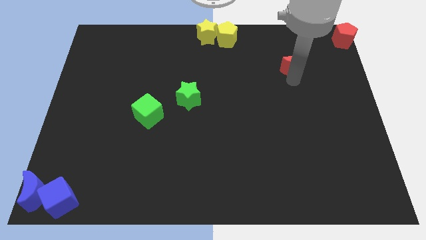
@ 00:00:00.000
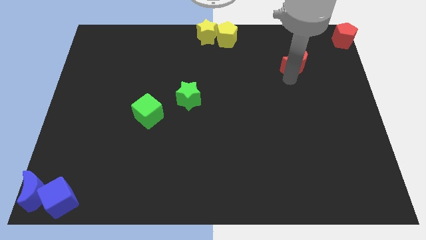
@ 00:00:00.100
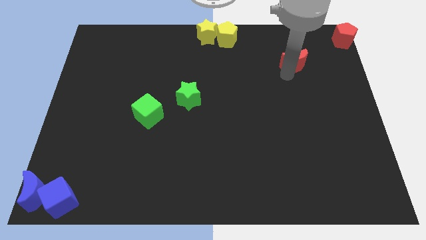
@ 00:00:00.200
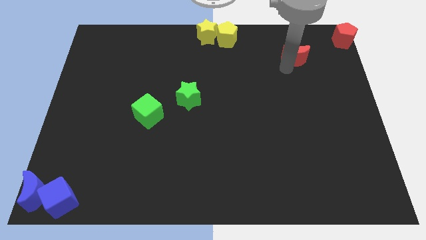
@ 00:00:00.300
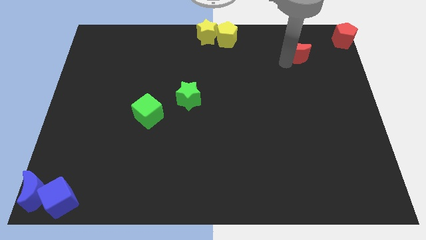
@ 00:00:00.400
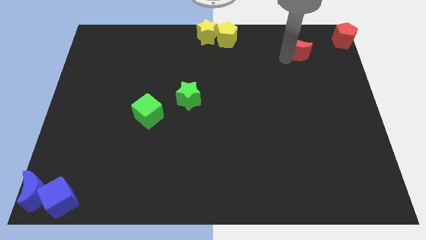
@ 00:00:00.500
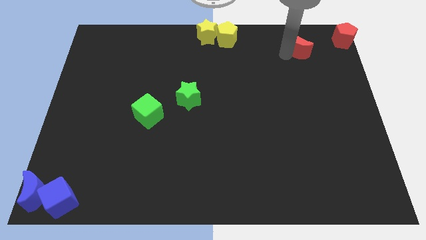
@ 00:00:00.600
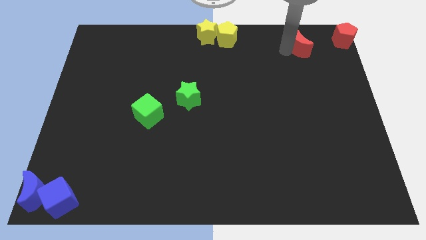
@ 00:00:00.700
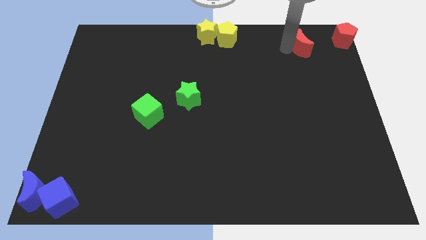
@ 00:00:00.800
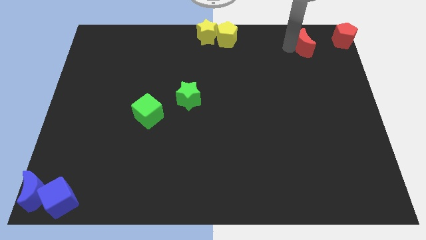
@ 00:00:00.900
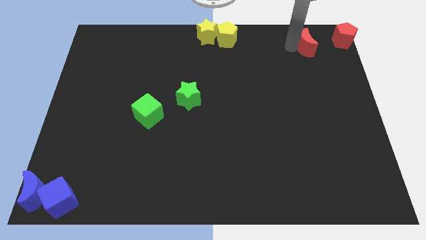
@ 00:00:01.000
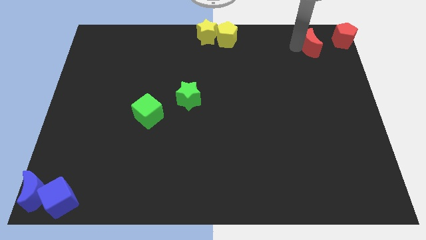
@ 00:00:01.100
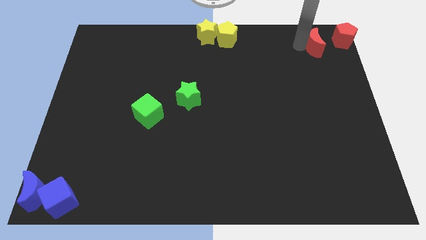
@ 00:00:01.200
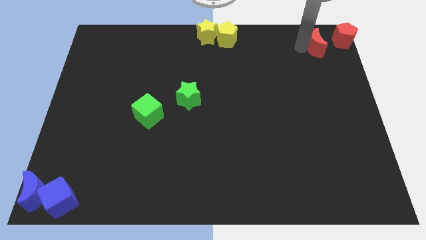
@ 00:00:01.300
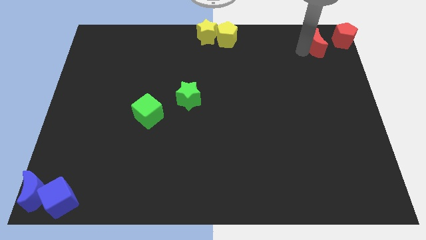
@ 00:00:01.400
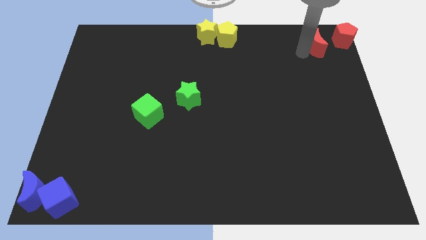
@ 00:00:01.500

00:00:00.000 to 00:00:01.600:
move the red moon close to the red pentagon

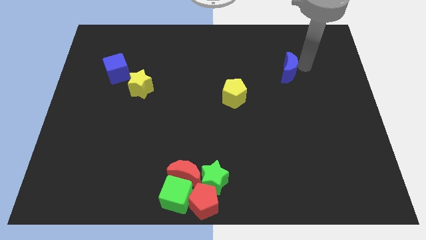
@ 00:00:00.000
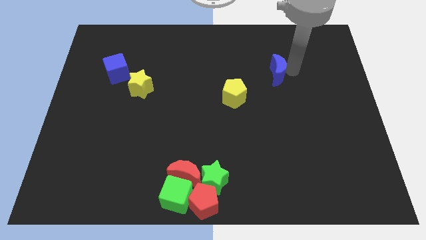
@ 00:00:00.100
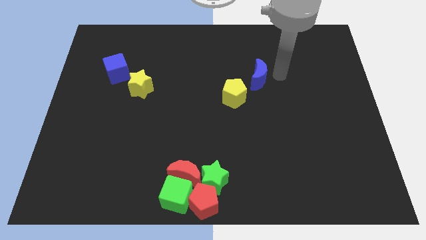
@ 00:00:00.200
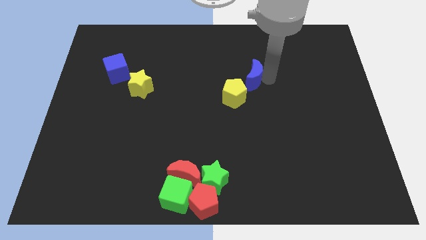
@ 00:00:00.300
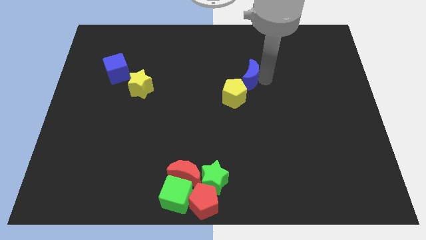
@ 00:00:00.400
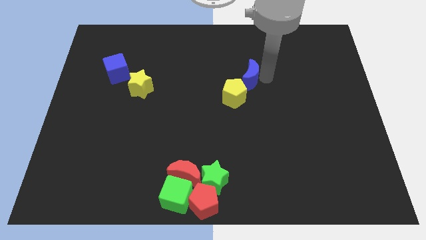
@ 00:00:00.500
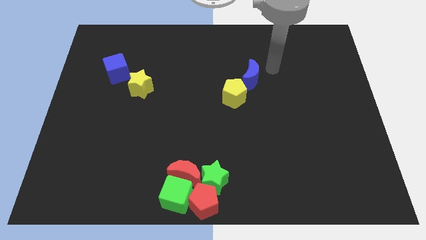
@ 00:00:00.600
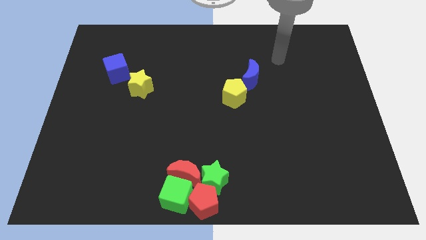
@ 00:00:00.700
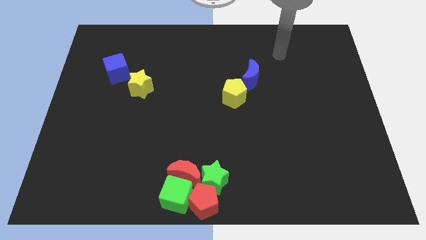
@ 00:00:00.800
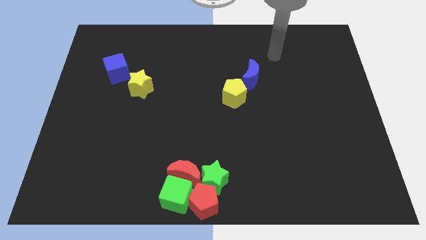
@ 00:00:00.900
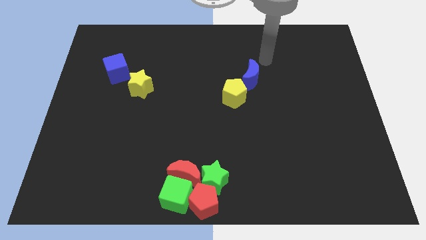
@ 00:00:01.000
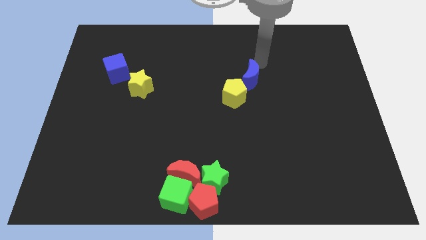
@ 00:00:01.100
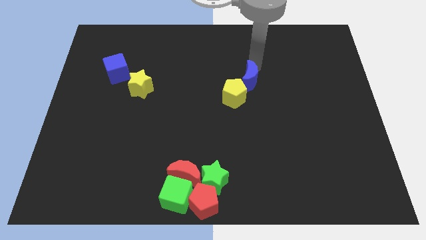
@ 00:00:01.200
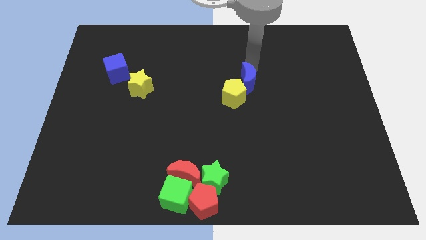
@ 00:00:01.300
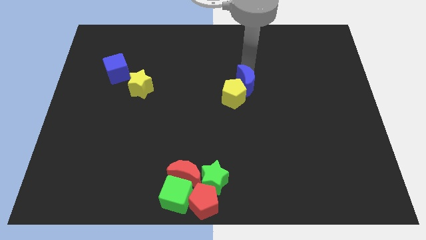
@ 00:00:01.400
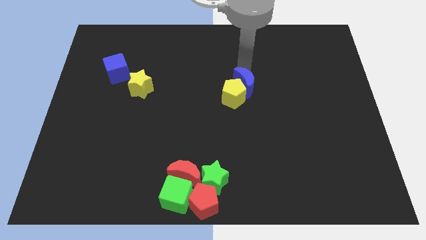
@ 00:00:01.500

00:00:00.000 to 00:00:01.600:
push the blue crescent into the yellow pentagon

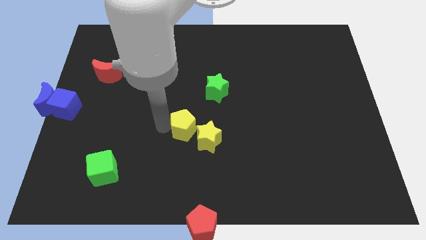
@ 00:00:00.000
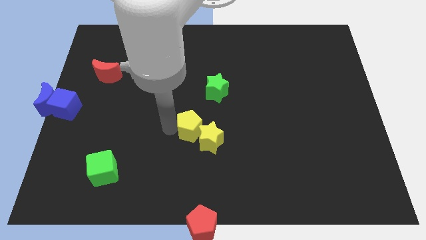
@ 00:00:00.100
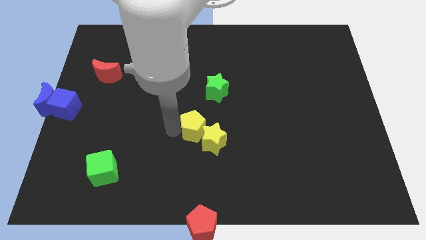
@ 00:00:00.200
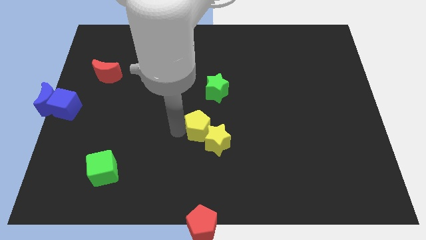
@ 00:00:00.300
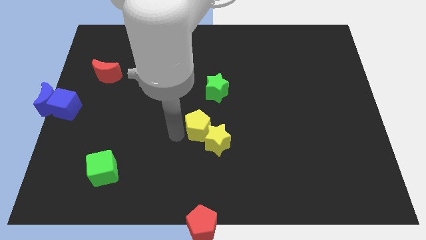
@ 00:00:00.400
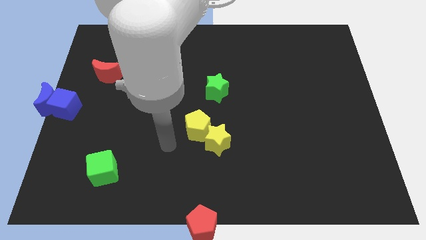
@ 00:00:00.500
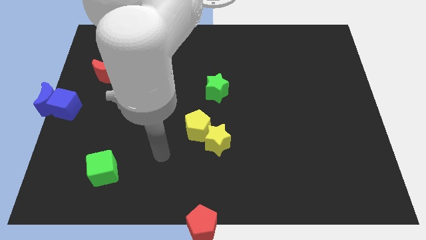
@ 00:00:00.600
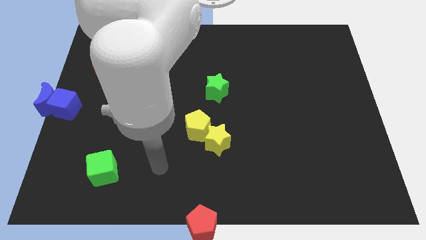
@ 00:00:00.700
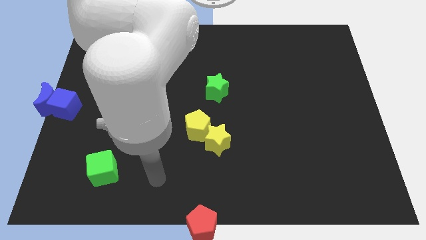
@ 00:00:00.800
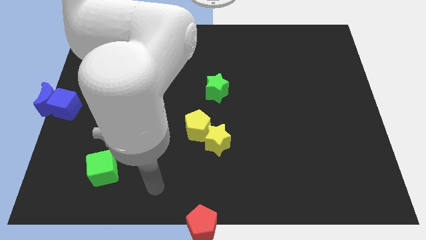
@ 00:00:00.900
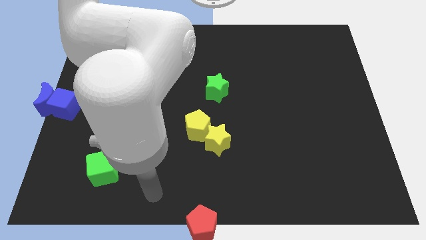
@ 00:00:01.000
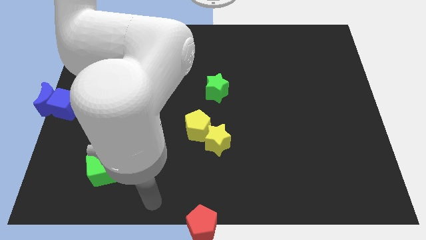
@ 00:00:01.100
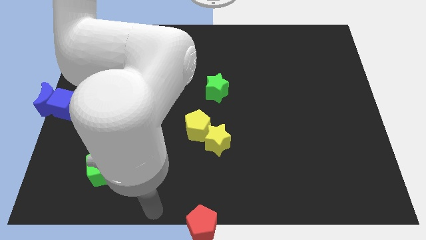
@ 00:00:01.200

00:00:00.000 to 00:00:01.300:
move the arm away from the yellow pentagon

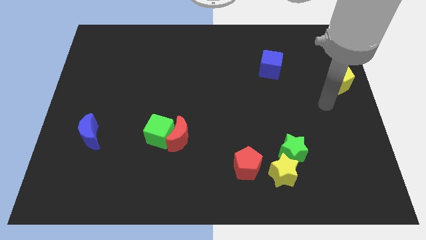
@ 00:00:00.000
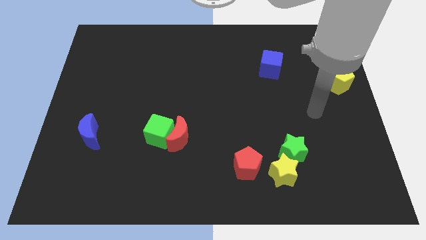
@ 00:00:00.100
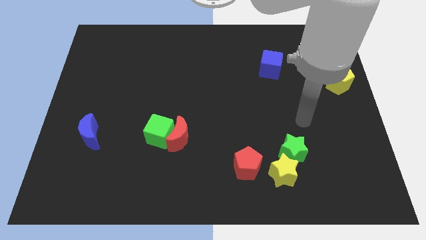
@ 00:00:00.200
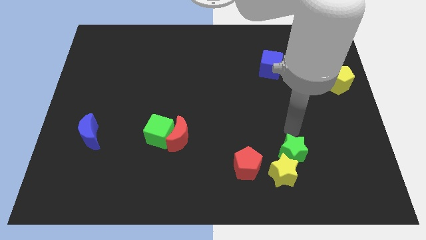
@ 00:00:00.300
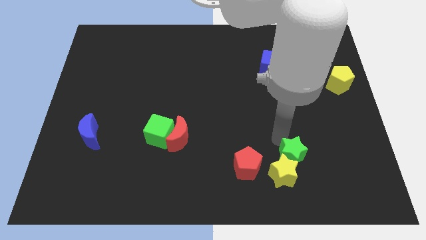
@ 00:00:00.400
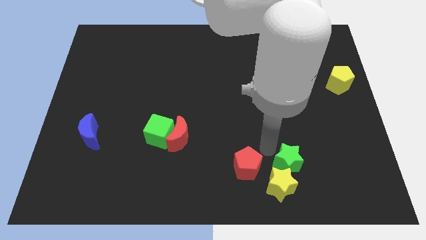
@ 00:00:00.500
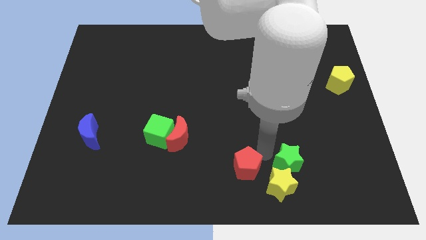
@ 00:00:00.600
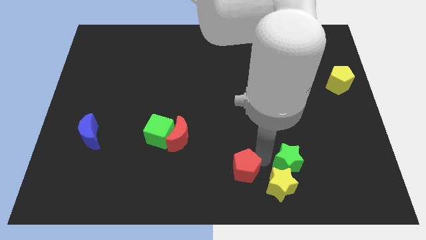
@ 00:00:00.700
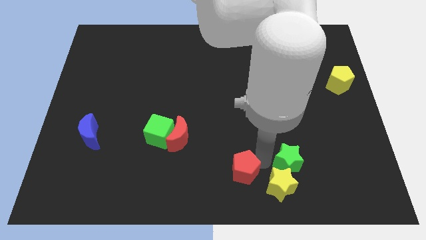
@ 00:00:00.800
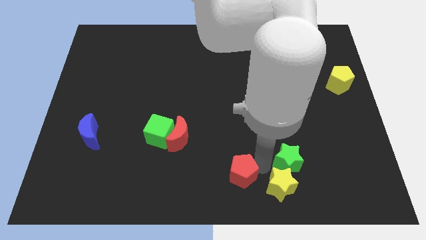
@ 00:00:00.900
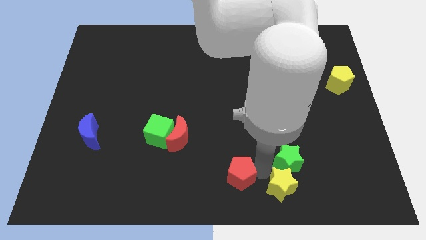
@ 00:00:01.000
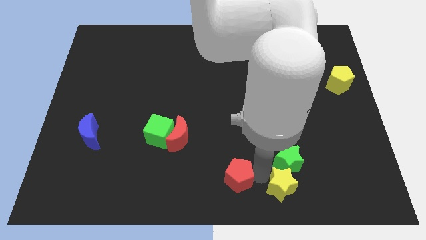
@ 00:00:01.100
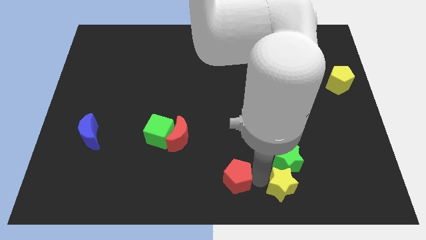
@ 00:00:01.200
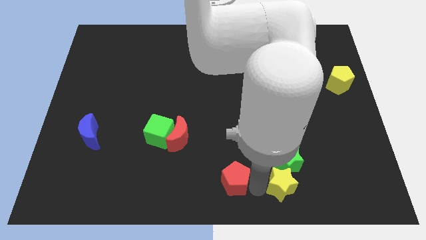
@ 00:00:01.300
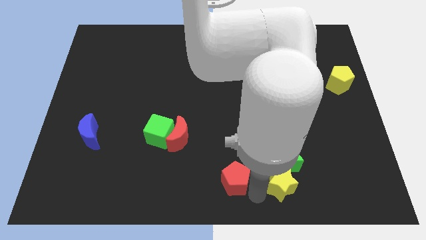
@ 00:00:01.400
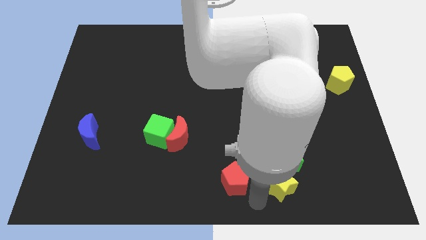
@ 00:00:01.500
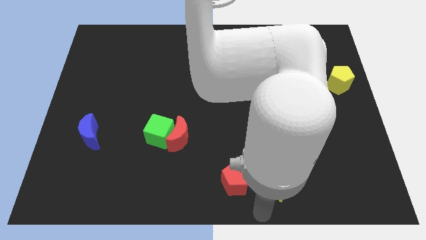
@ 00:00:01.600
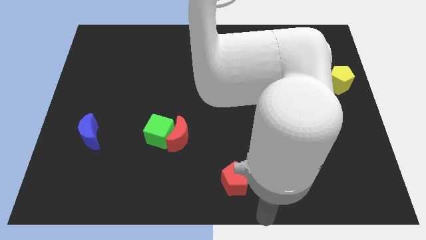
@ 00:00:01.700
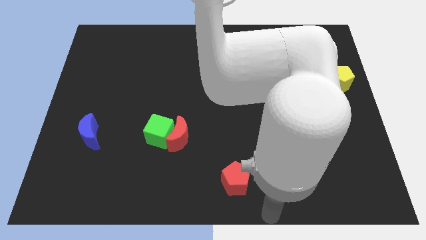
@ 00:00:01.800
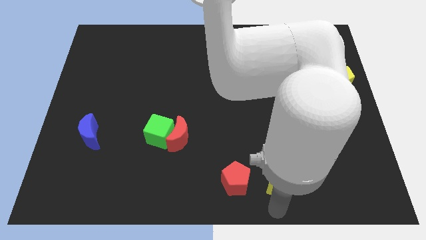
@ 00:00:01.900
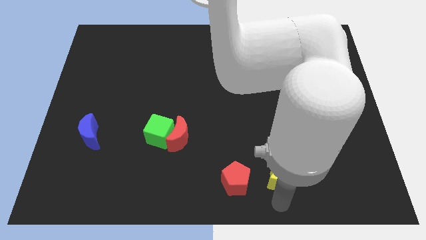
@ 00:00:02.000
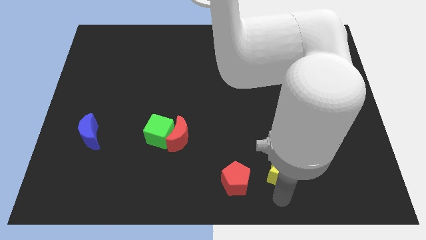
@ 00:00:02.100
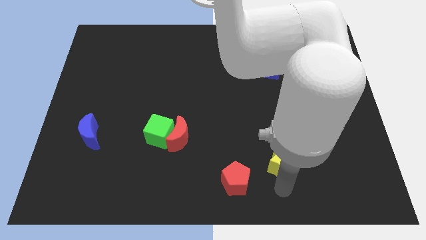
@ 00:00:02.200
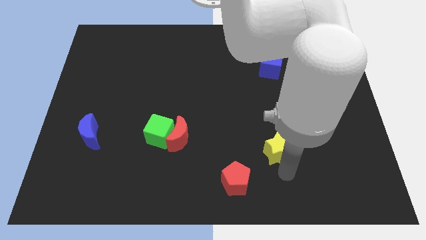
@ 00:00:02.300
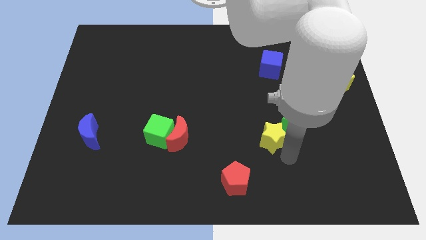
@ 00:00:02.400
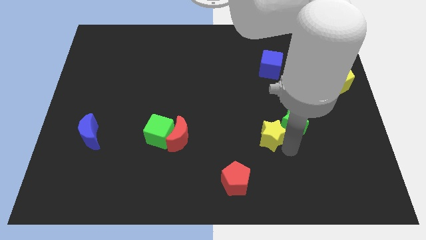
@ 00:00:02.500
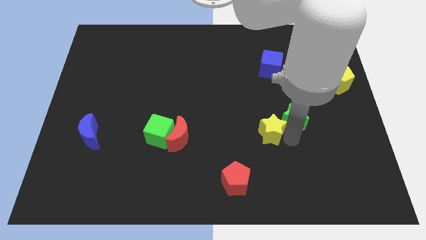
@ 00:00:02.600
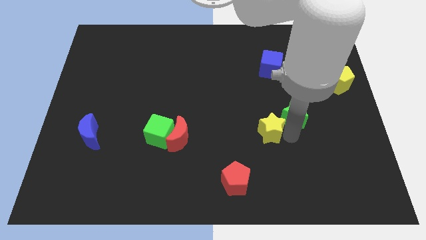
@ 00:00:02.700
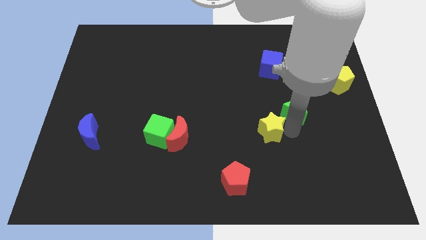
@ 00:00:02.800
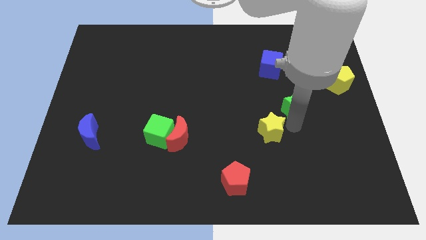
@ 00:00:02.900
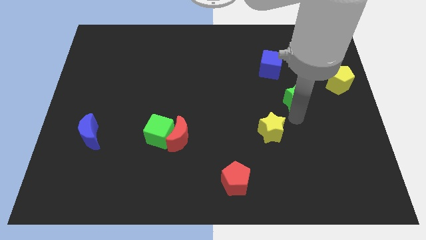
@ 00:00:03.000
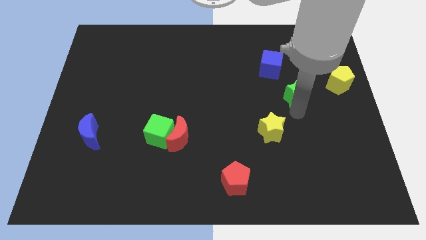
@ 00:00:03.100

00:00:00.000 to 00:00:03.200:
separate yellow star and green star

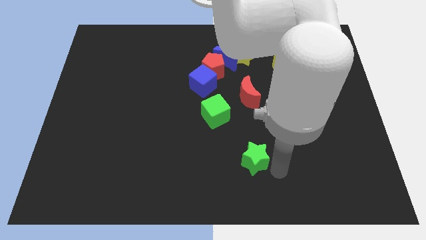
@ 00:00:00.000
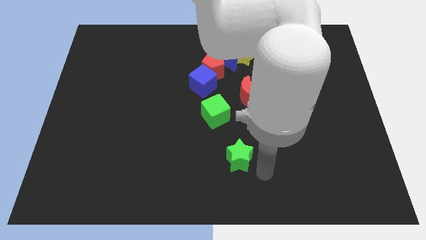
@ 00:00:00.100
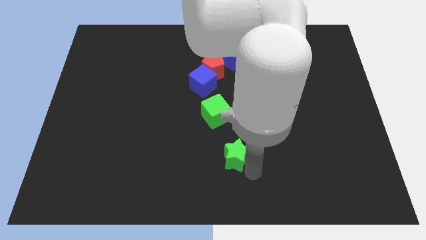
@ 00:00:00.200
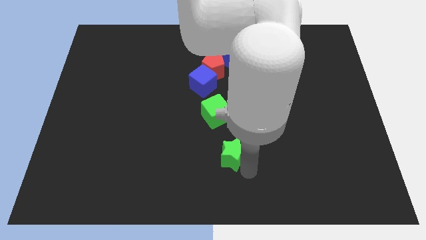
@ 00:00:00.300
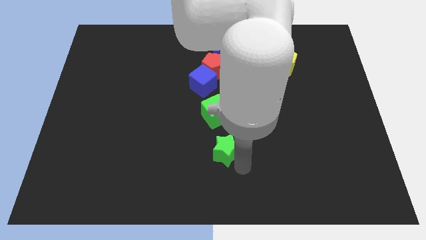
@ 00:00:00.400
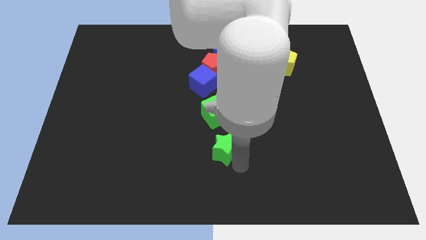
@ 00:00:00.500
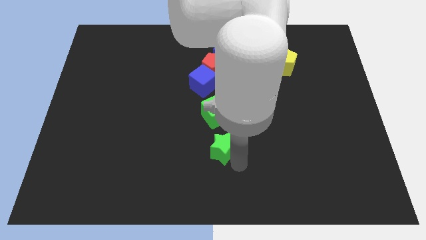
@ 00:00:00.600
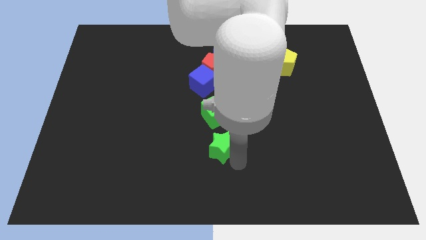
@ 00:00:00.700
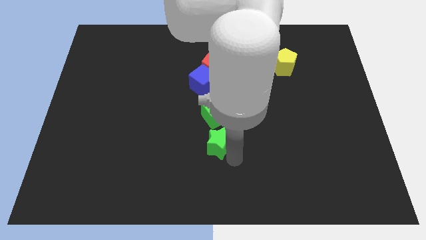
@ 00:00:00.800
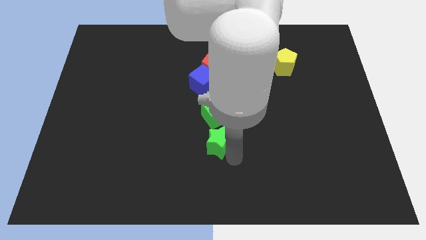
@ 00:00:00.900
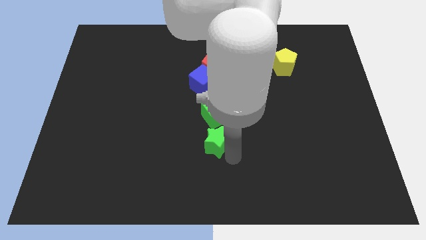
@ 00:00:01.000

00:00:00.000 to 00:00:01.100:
push green star below green cube
